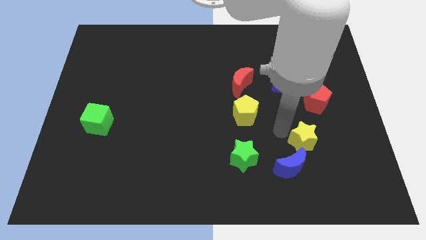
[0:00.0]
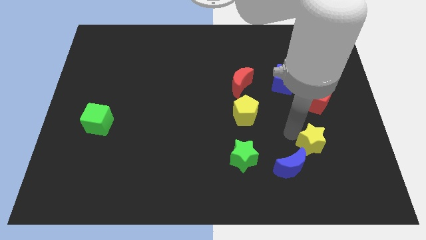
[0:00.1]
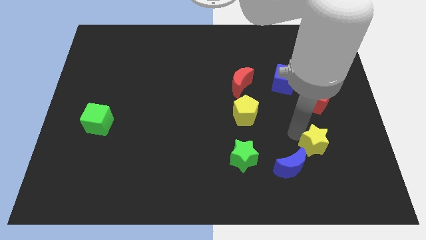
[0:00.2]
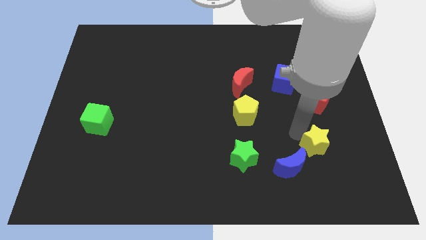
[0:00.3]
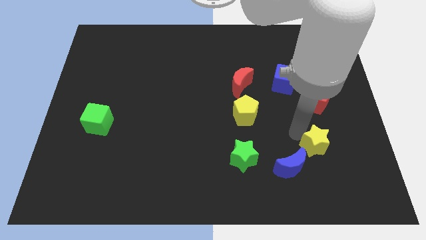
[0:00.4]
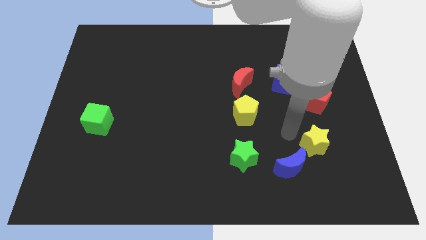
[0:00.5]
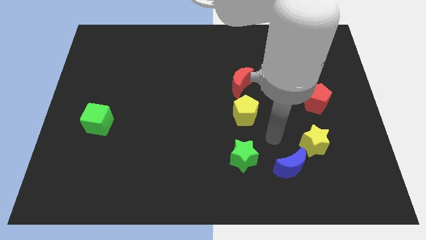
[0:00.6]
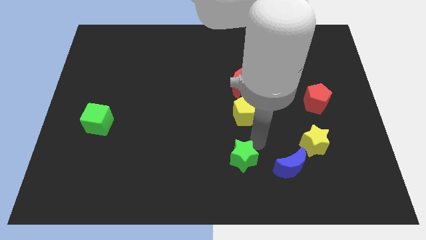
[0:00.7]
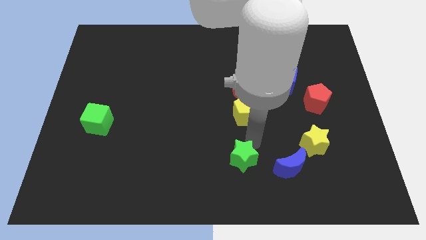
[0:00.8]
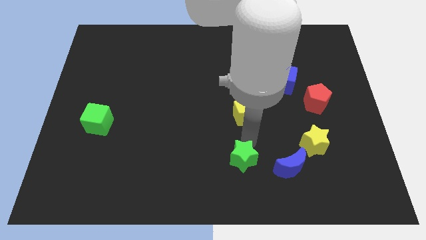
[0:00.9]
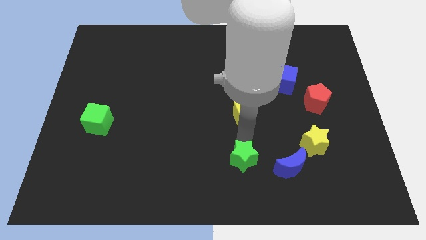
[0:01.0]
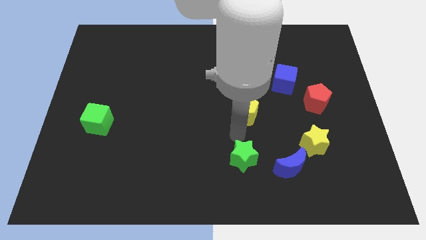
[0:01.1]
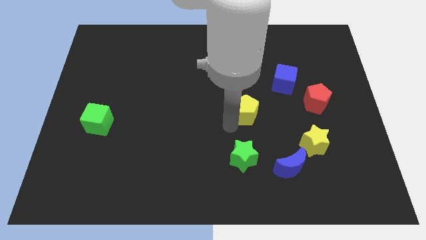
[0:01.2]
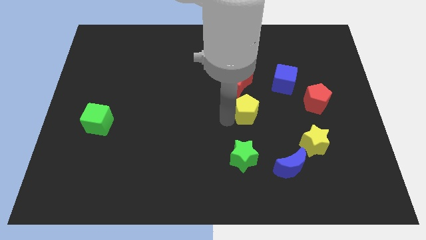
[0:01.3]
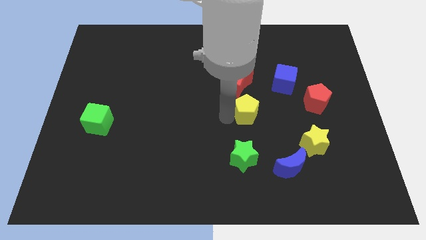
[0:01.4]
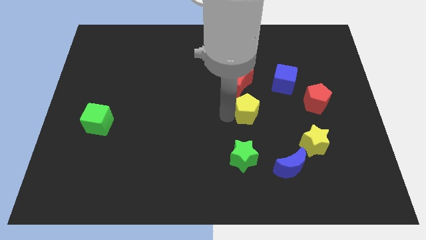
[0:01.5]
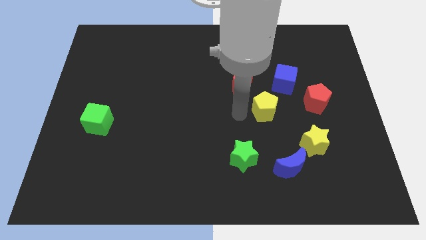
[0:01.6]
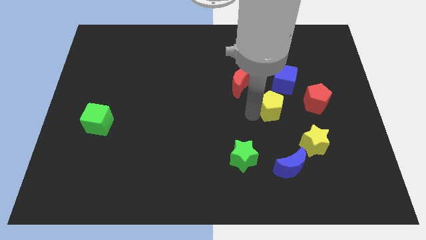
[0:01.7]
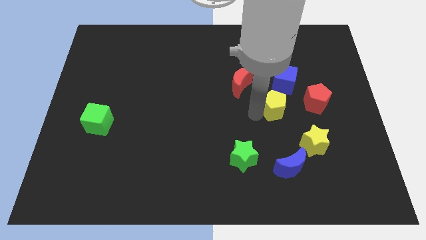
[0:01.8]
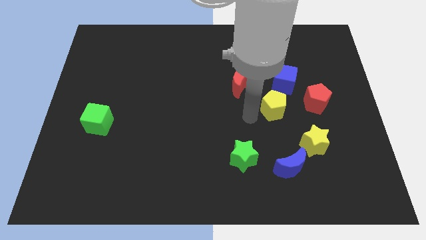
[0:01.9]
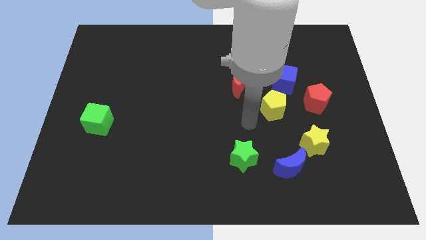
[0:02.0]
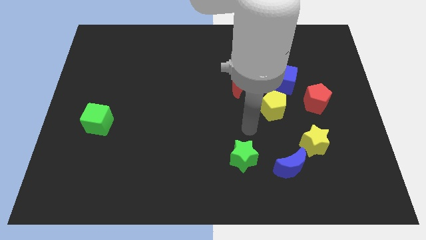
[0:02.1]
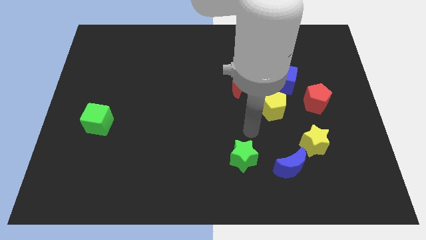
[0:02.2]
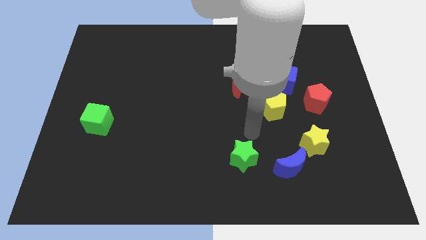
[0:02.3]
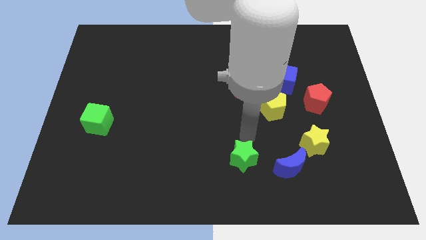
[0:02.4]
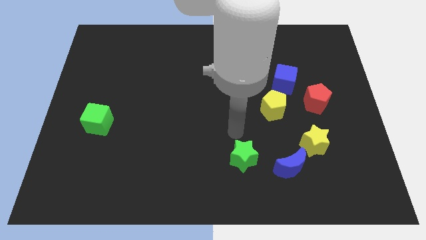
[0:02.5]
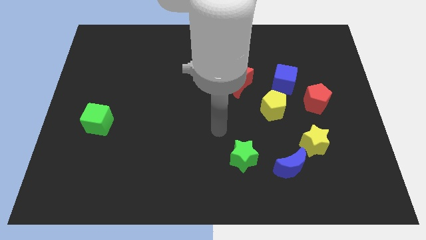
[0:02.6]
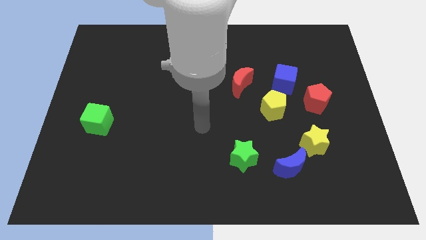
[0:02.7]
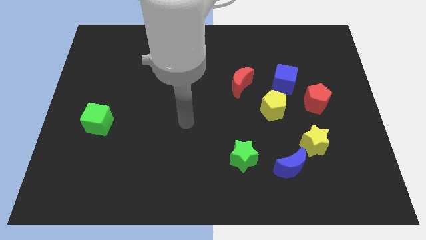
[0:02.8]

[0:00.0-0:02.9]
place the yellow pentagon to the left side of red pentagon

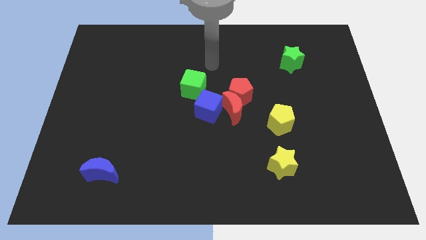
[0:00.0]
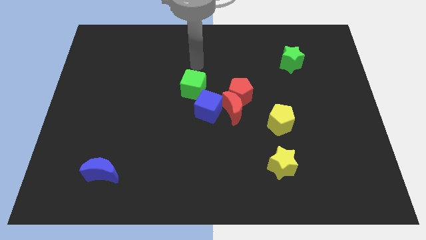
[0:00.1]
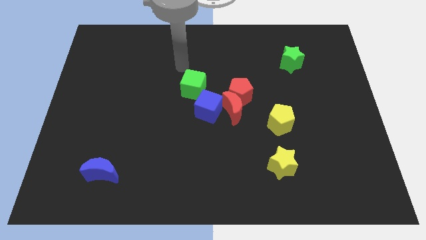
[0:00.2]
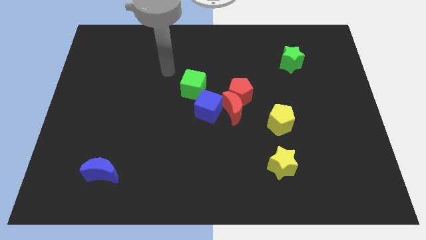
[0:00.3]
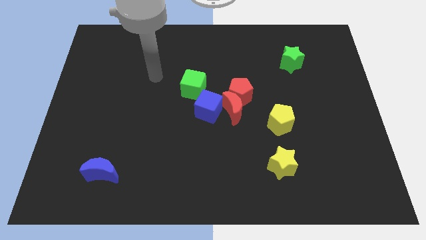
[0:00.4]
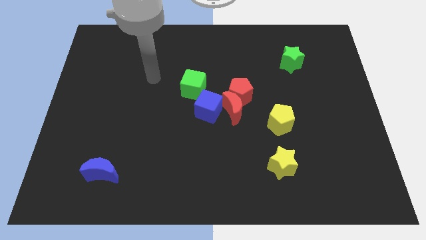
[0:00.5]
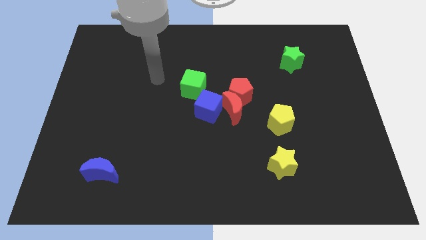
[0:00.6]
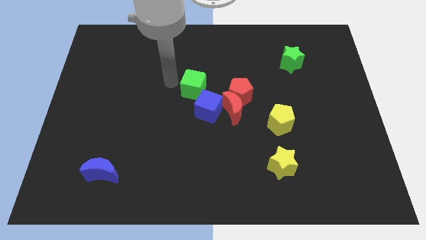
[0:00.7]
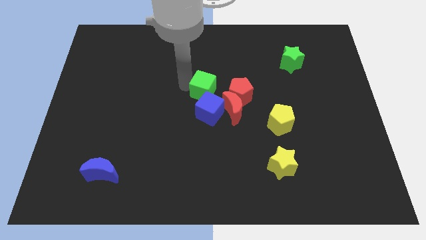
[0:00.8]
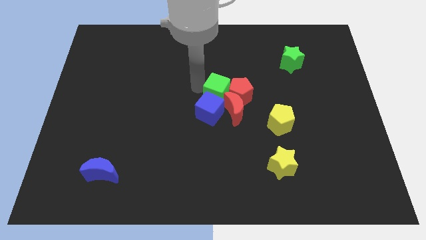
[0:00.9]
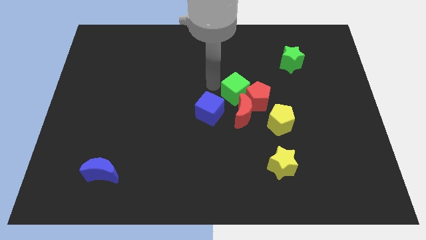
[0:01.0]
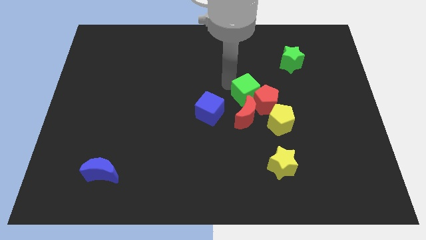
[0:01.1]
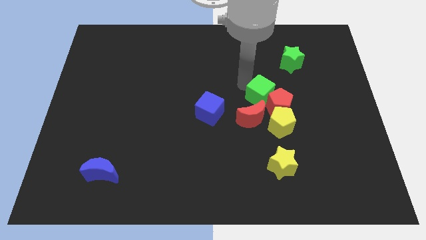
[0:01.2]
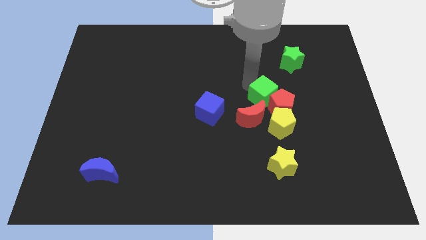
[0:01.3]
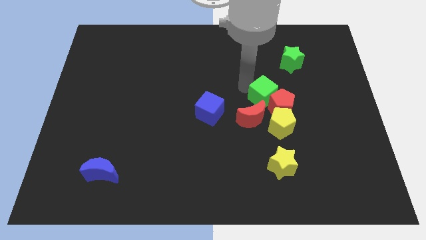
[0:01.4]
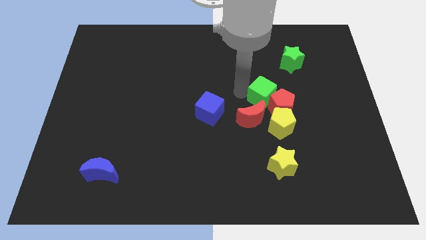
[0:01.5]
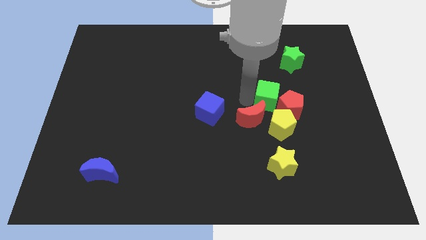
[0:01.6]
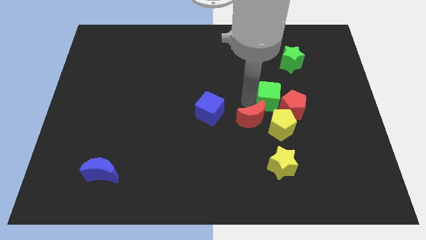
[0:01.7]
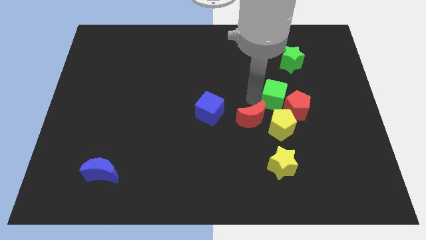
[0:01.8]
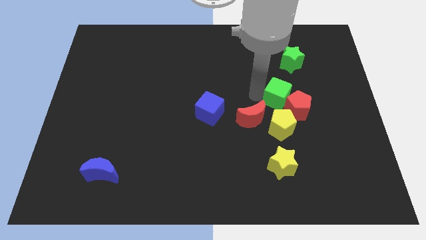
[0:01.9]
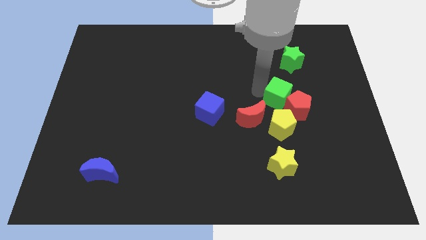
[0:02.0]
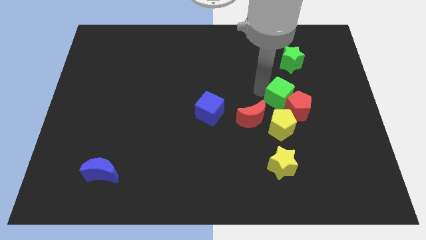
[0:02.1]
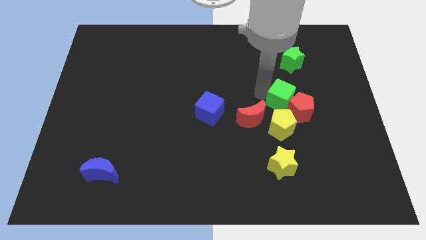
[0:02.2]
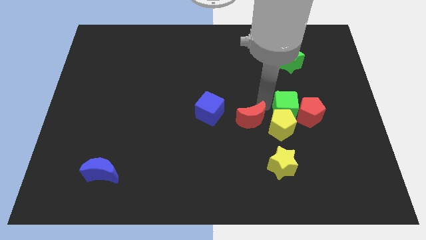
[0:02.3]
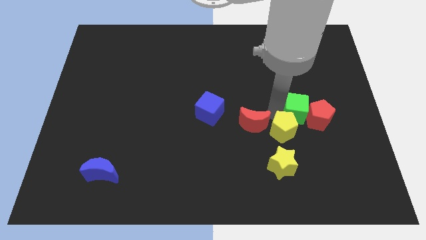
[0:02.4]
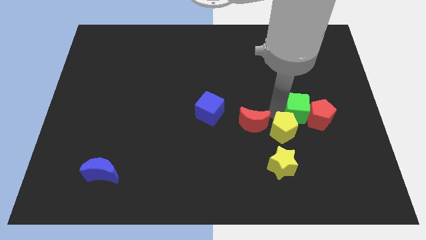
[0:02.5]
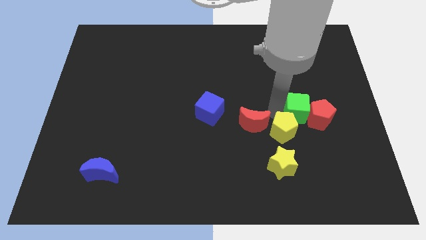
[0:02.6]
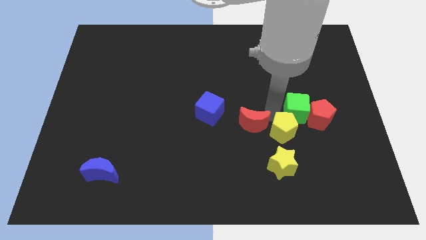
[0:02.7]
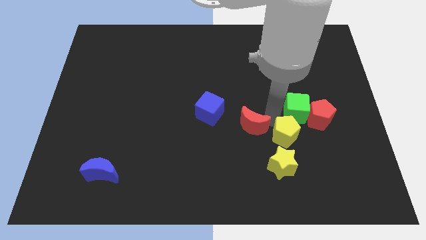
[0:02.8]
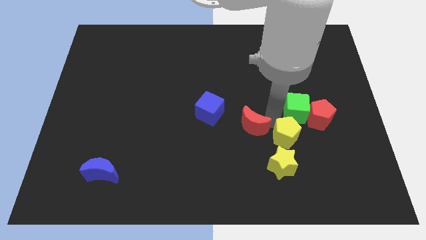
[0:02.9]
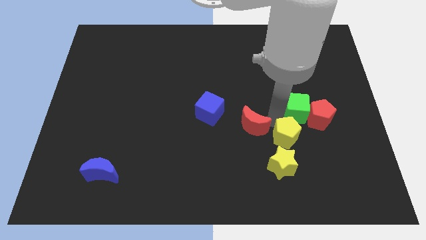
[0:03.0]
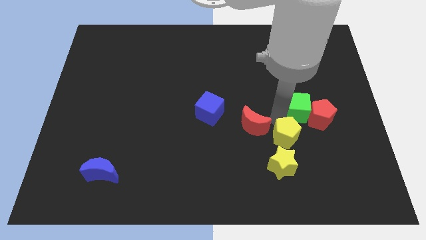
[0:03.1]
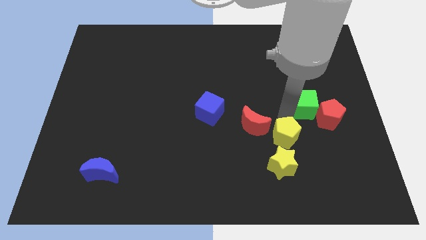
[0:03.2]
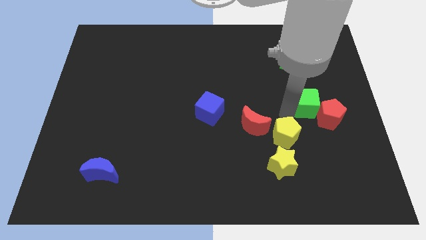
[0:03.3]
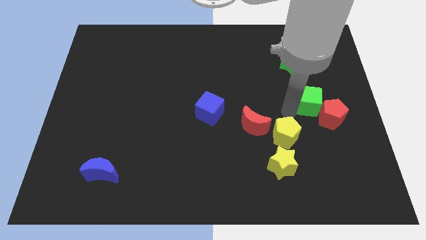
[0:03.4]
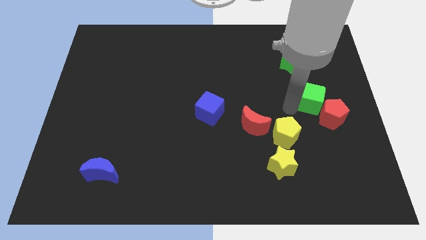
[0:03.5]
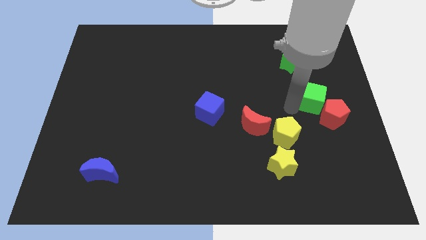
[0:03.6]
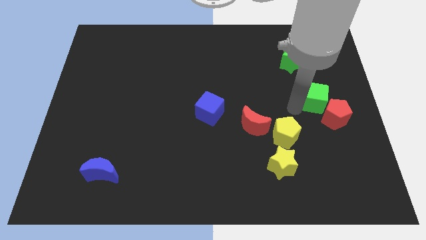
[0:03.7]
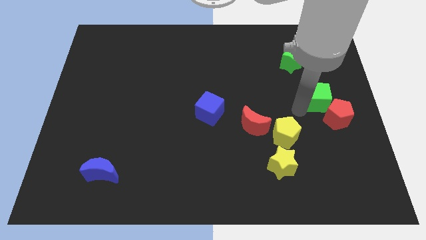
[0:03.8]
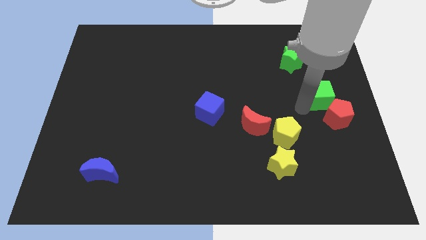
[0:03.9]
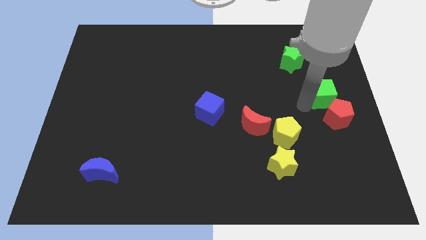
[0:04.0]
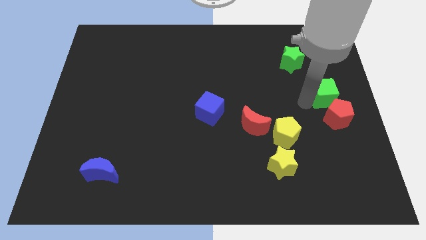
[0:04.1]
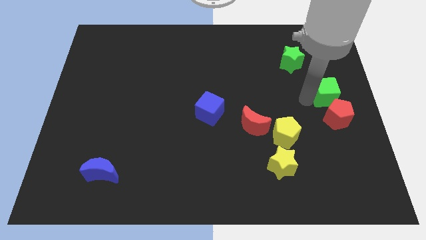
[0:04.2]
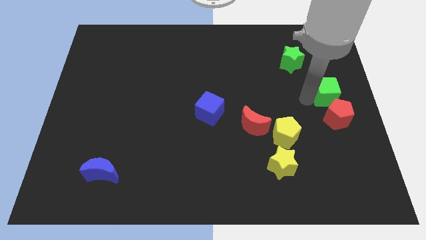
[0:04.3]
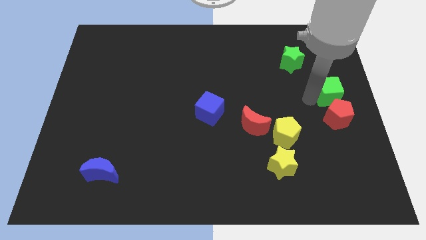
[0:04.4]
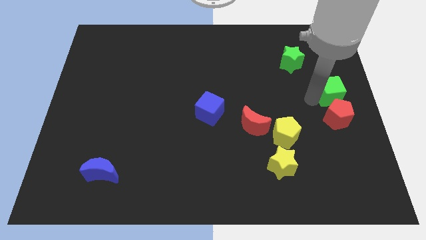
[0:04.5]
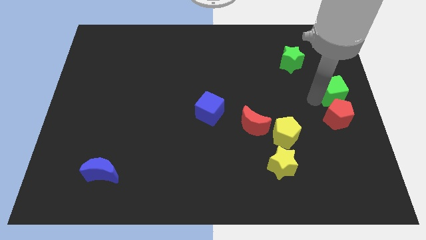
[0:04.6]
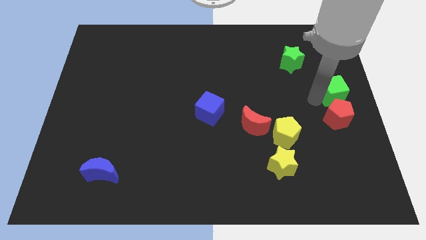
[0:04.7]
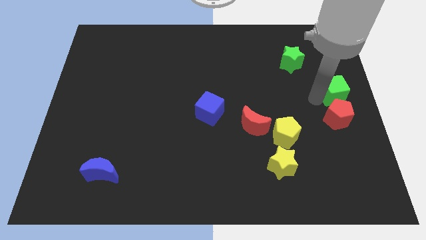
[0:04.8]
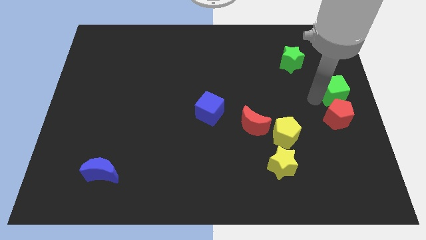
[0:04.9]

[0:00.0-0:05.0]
move the green cube to the right center of the board

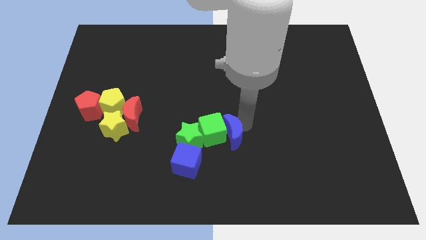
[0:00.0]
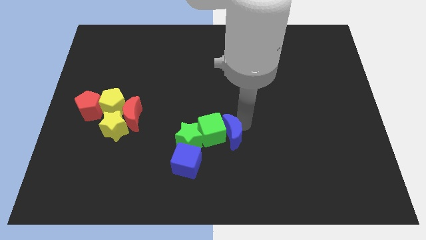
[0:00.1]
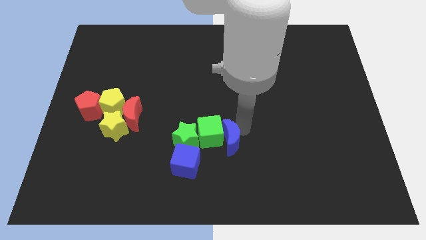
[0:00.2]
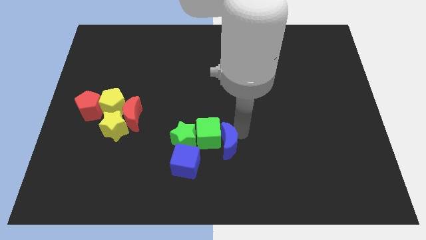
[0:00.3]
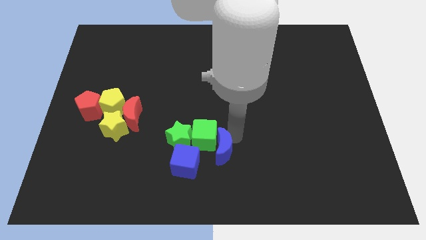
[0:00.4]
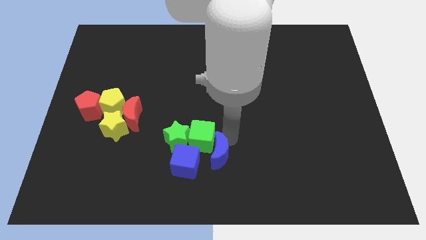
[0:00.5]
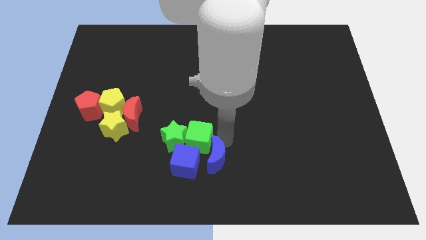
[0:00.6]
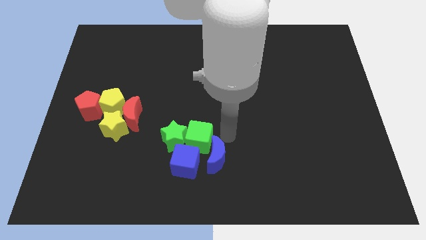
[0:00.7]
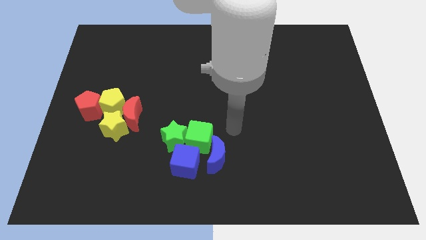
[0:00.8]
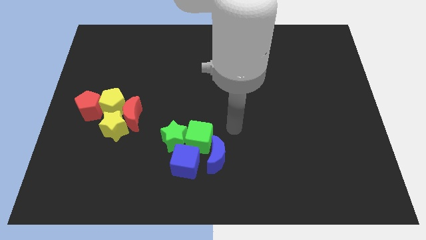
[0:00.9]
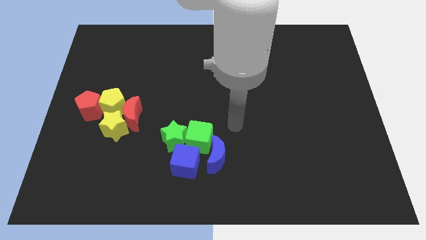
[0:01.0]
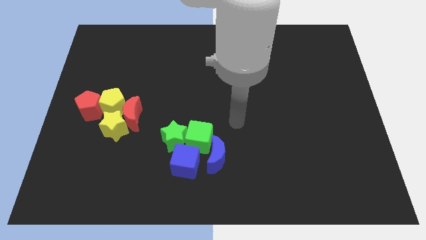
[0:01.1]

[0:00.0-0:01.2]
push the green star and green cube with the blue moon
